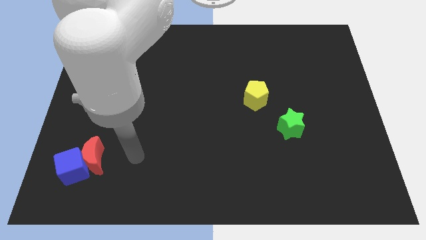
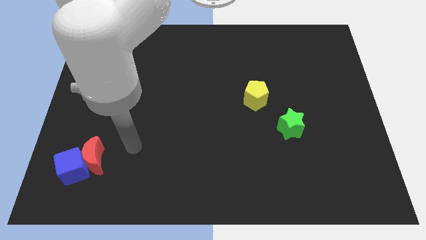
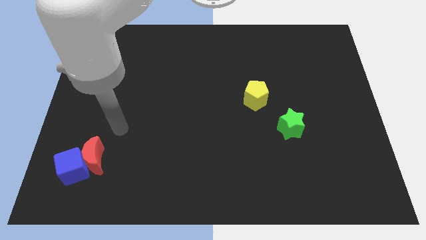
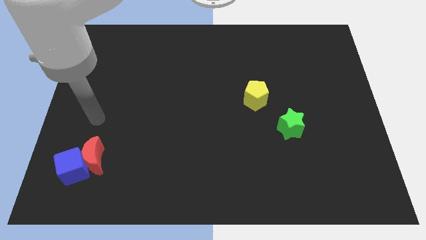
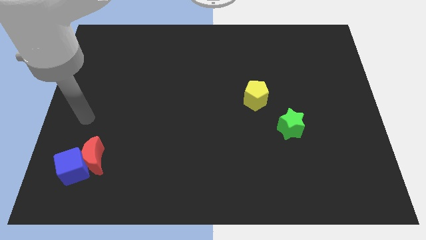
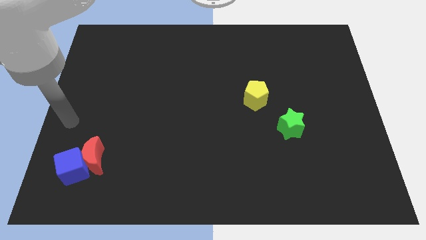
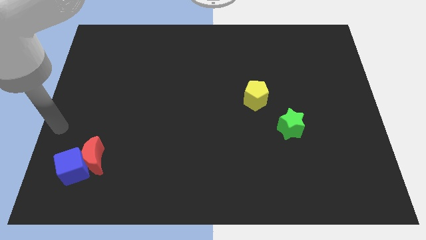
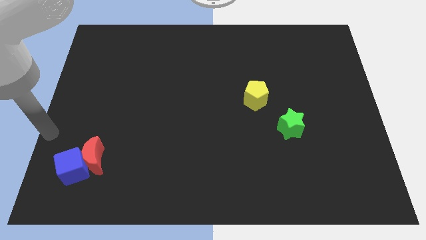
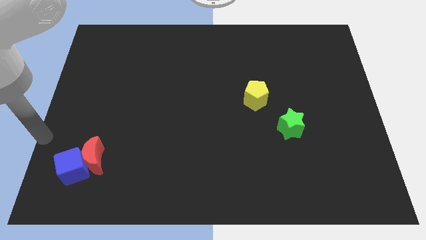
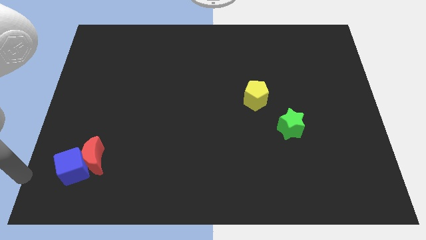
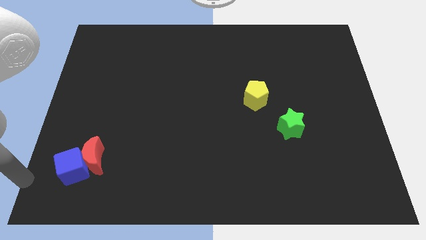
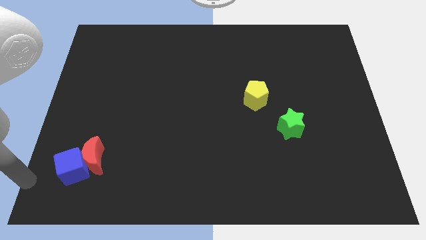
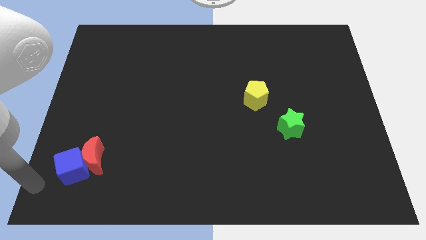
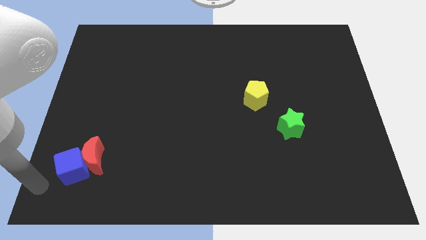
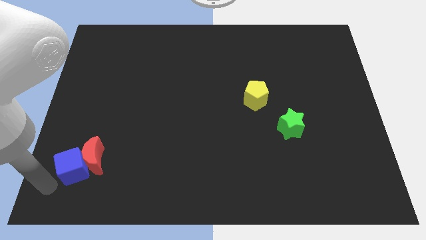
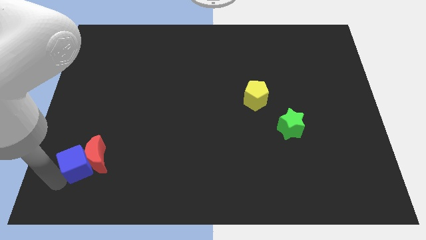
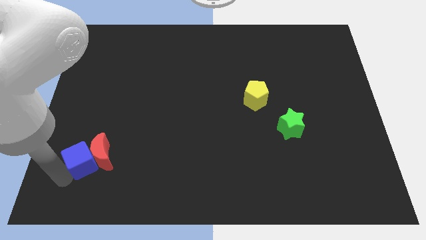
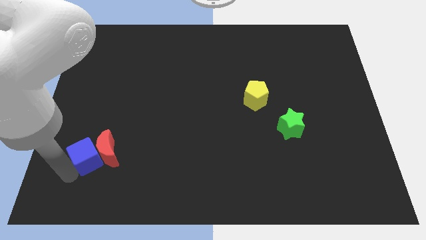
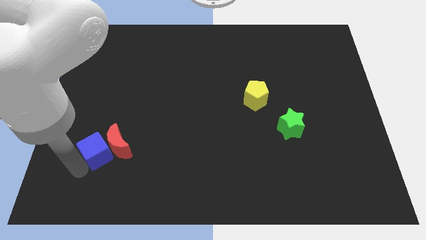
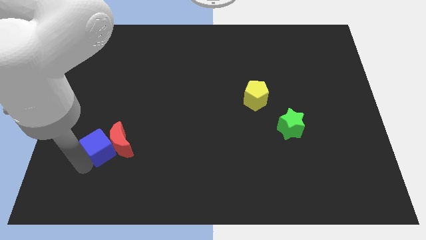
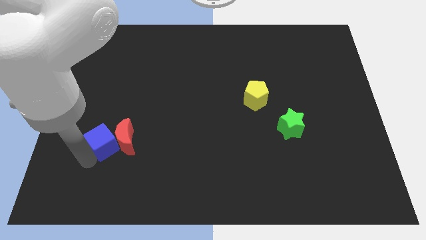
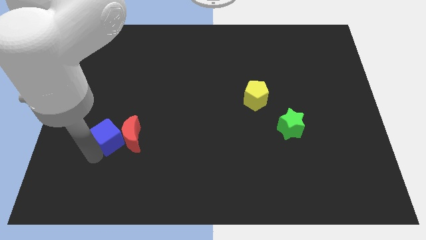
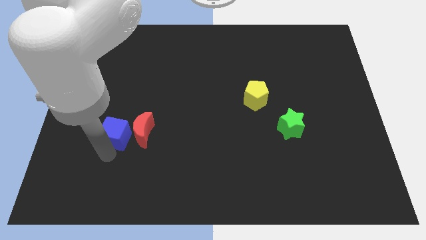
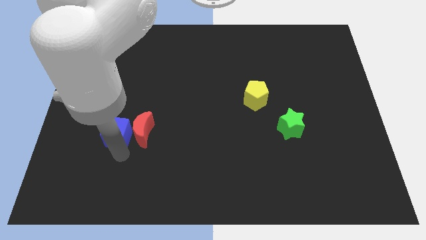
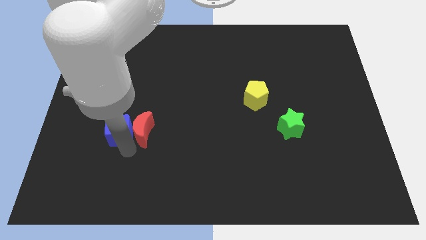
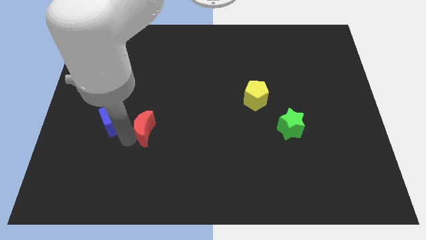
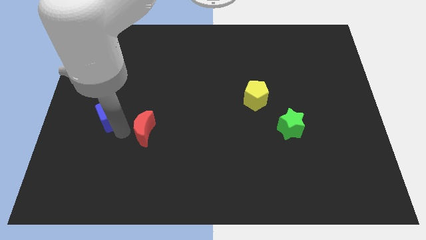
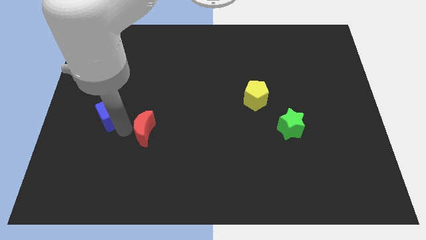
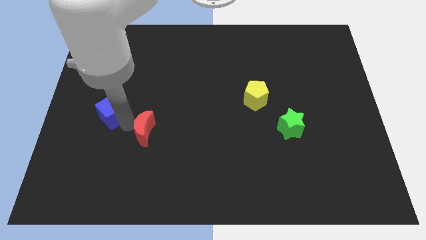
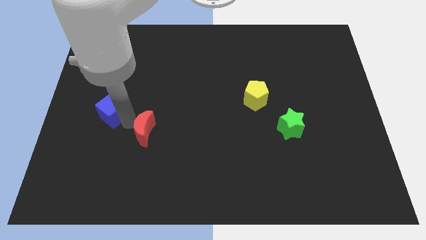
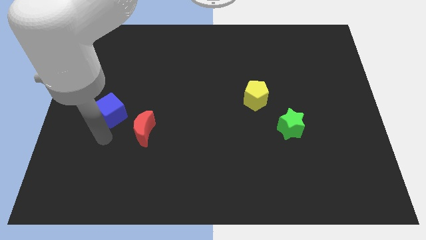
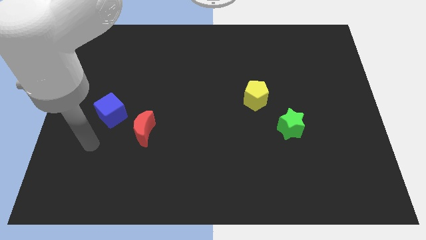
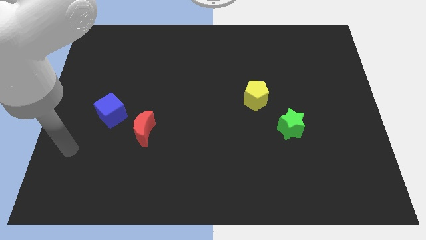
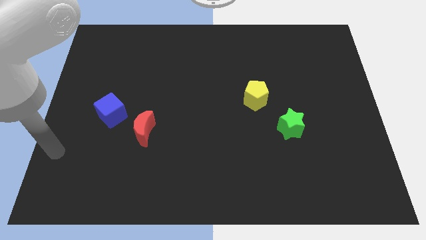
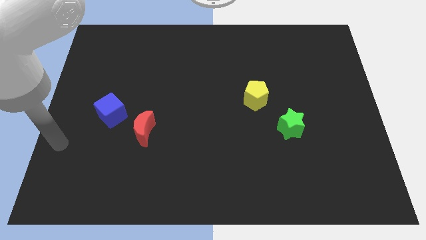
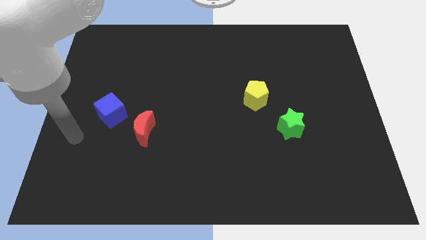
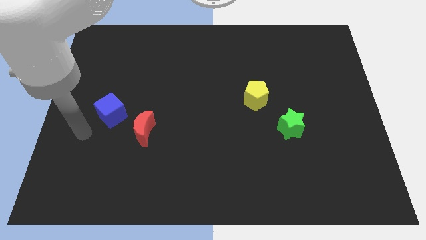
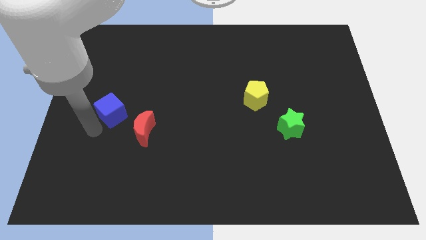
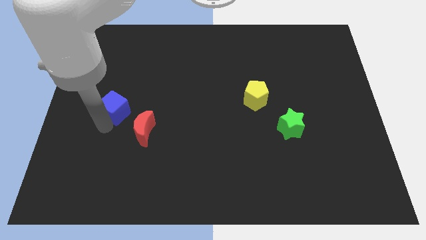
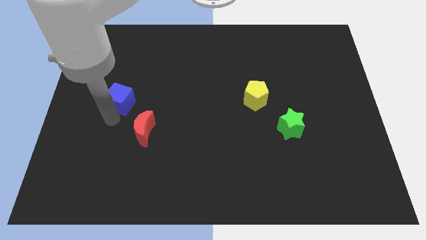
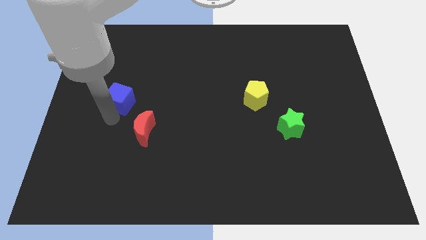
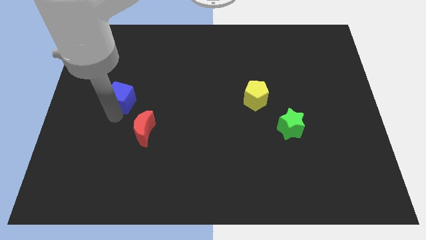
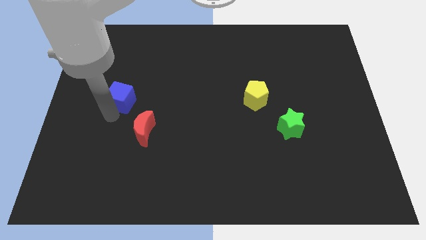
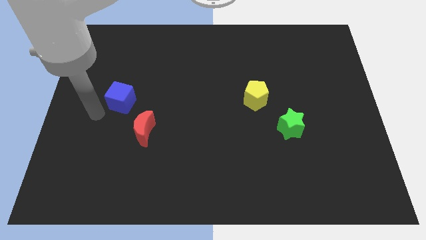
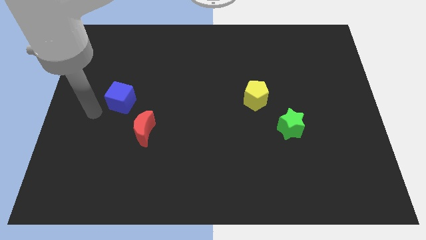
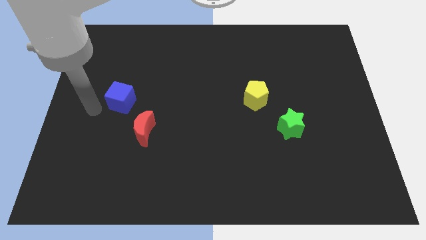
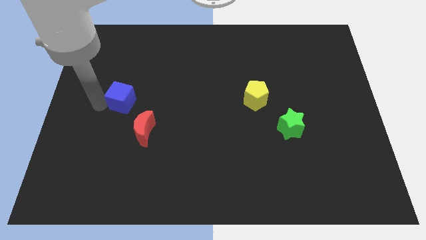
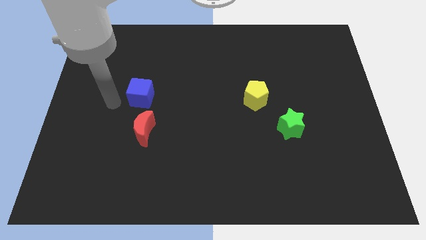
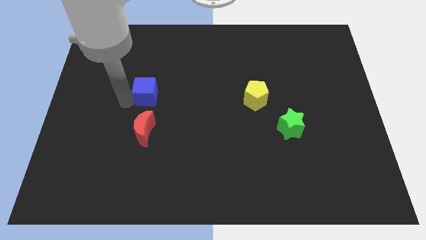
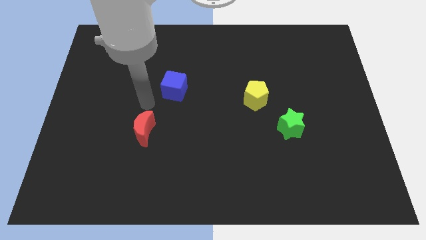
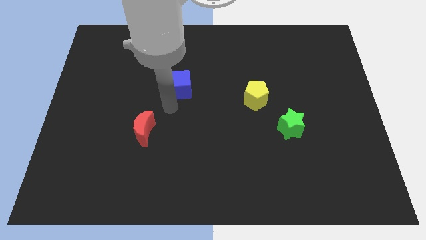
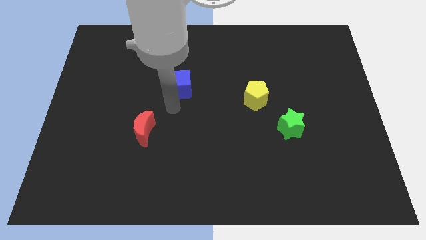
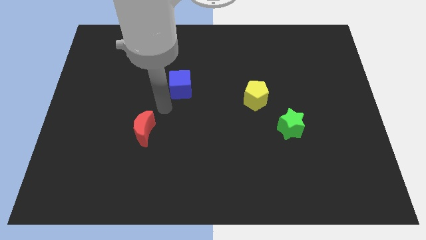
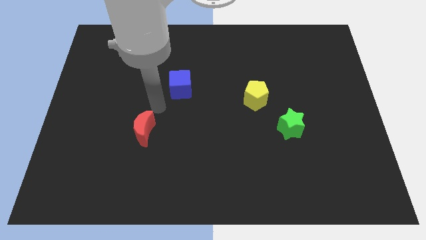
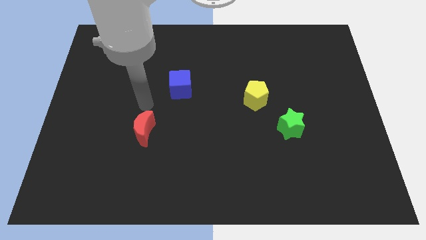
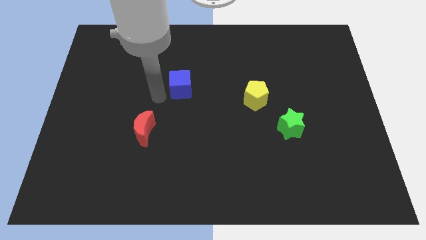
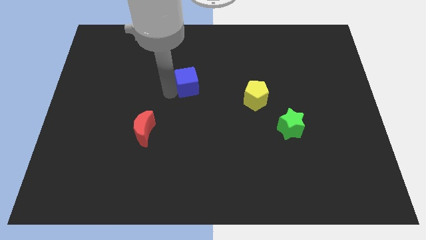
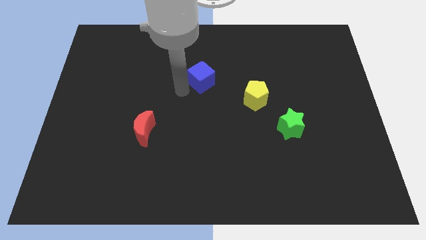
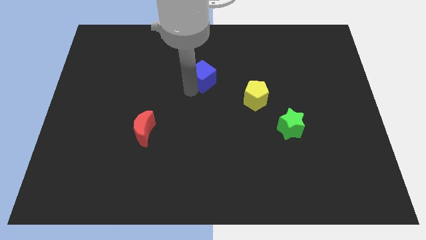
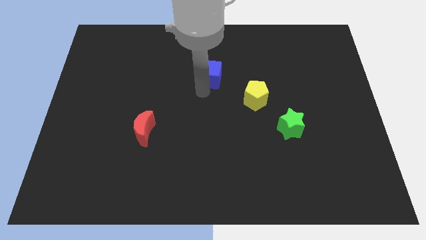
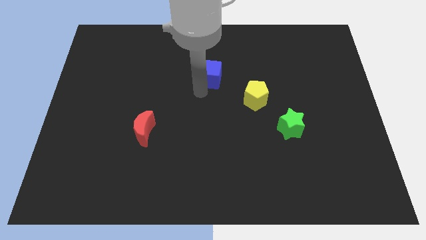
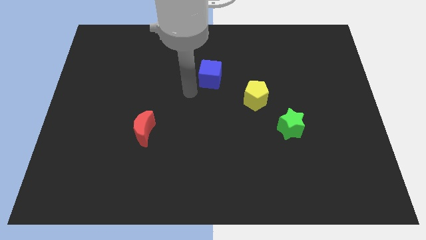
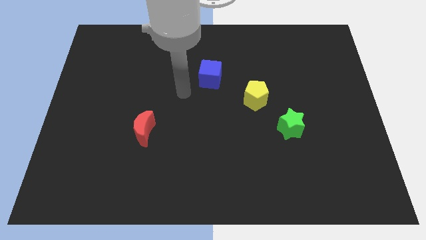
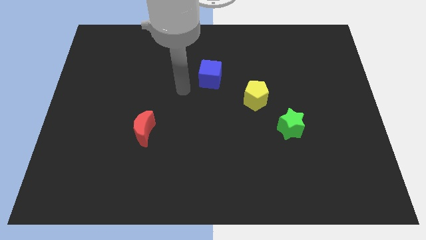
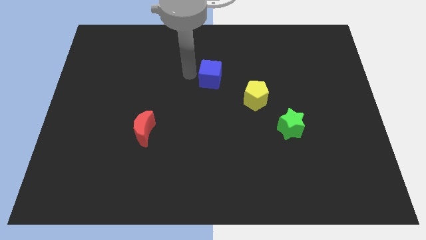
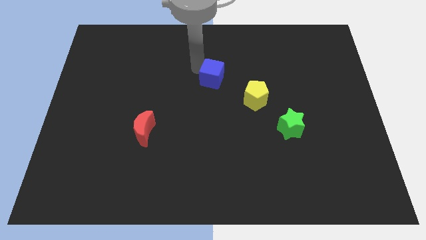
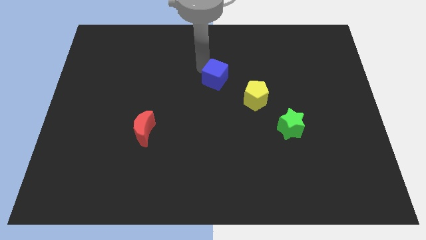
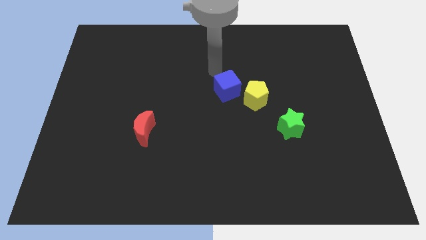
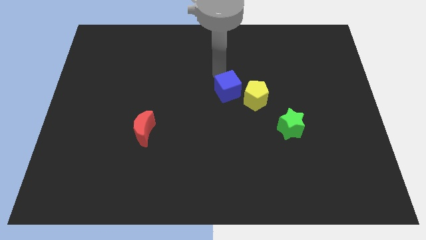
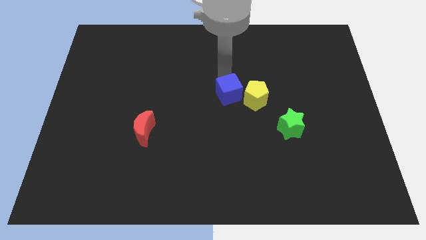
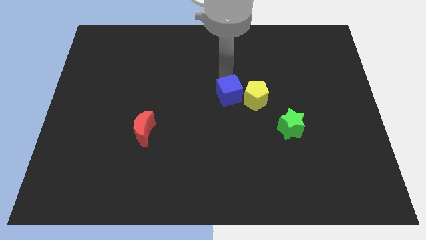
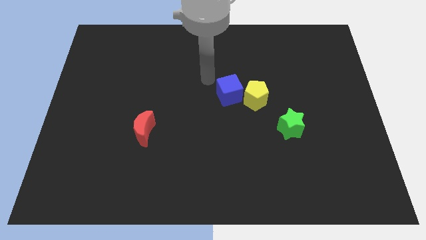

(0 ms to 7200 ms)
put the blue cube towards the yellow block

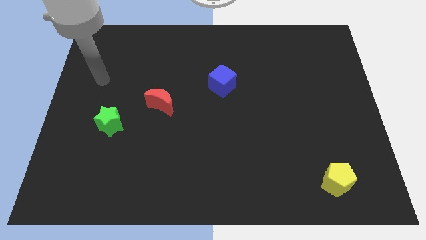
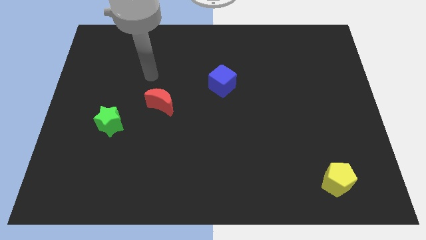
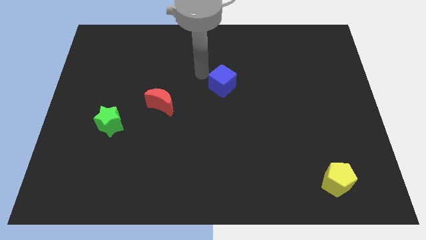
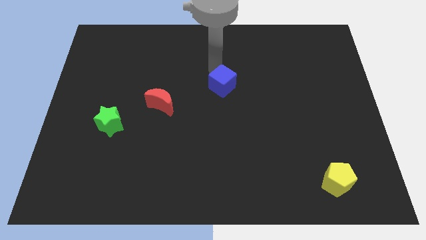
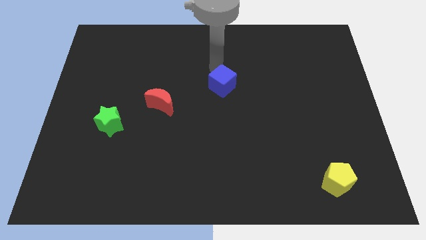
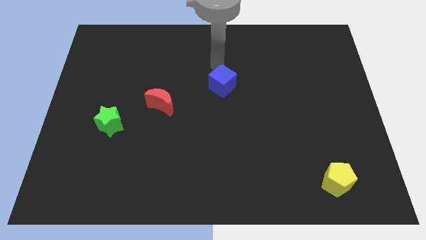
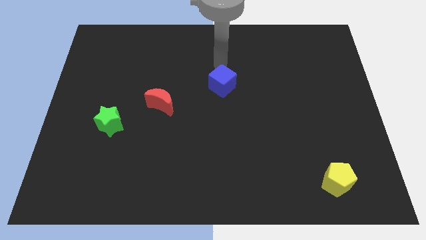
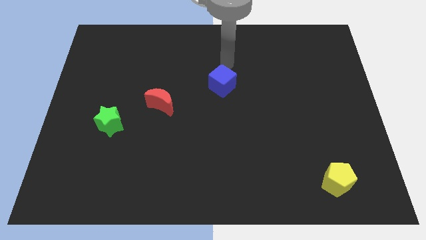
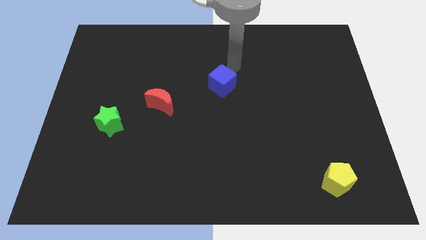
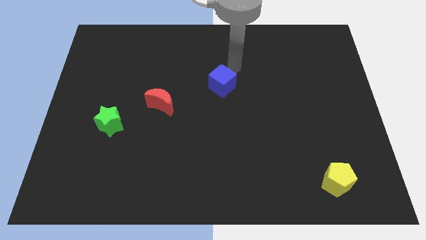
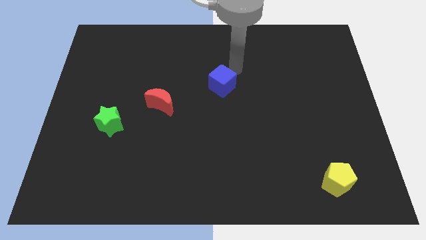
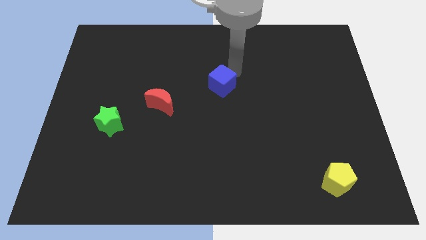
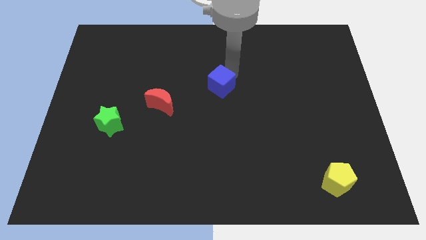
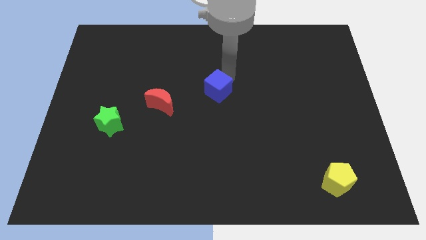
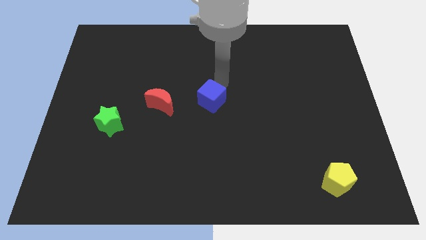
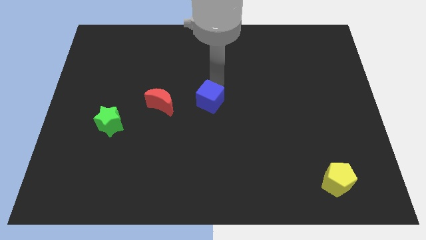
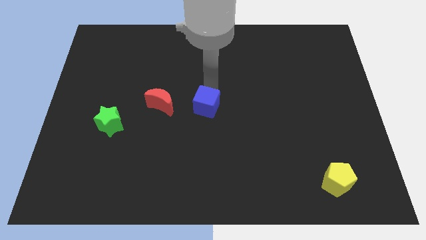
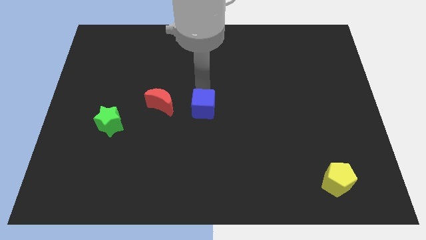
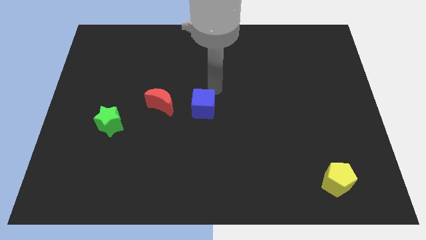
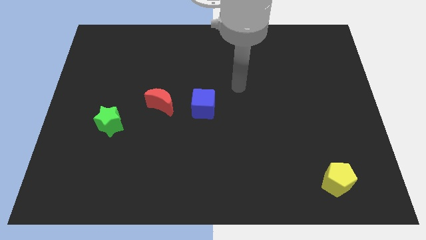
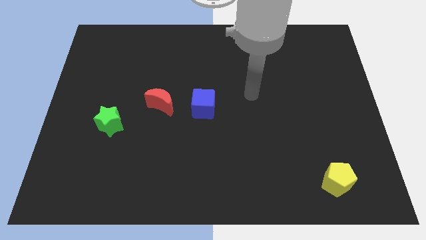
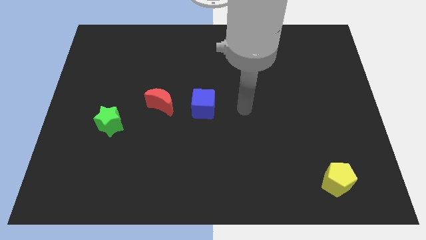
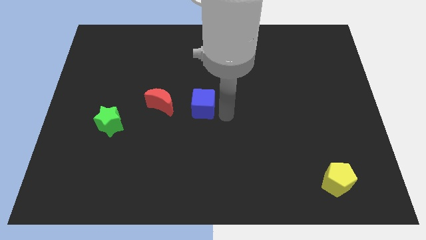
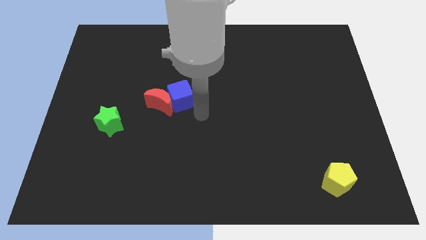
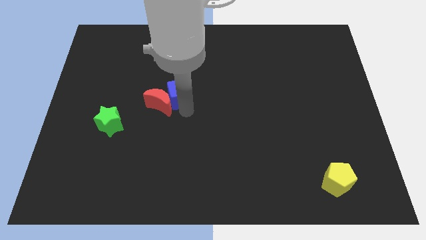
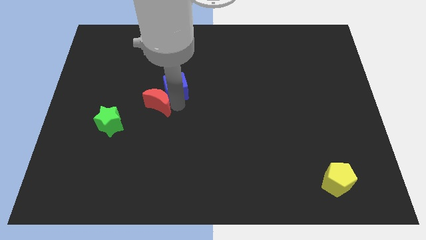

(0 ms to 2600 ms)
put the blue cube to the moon
